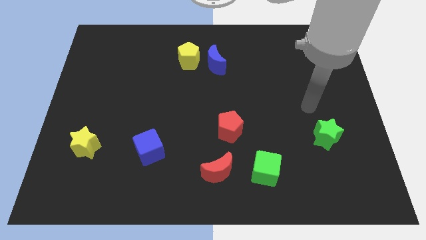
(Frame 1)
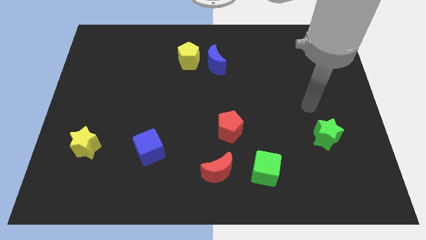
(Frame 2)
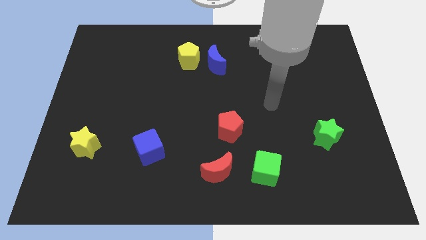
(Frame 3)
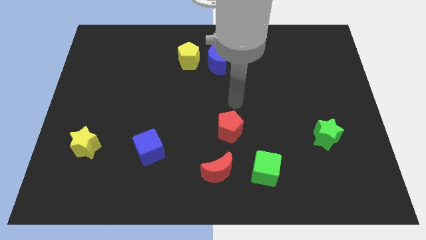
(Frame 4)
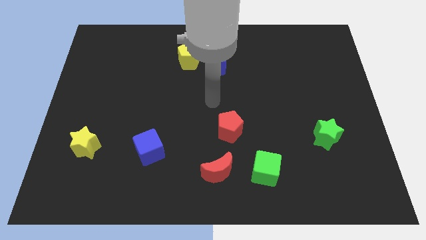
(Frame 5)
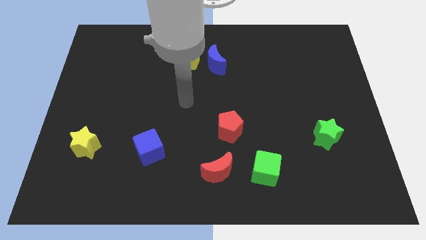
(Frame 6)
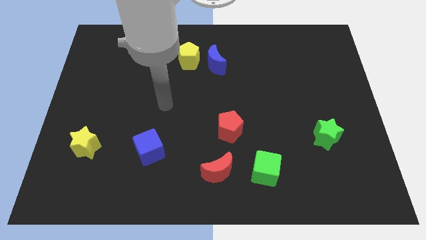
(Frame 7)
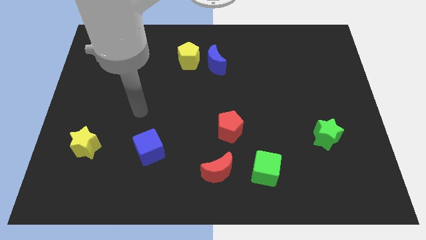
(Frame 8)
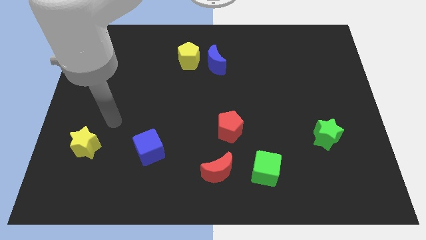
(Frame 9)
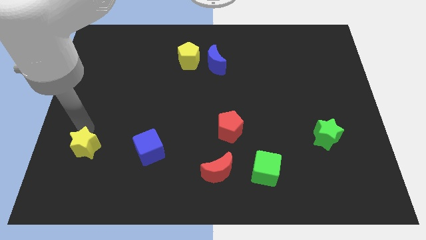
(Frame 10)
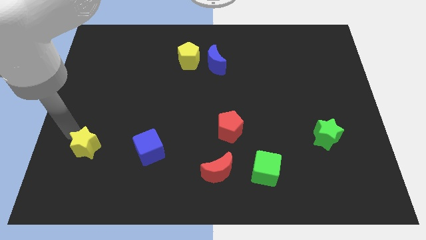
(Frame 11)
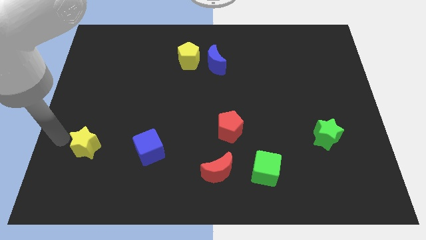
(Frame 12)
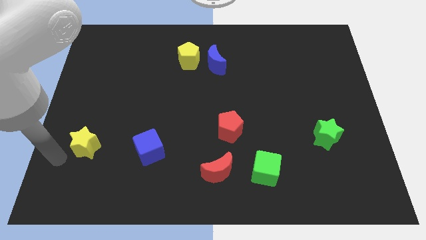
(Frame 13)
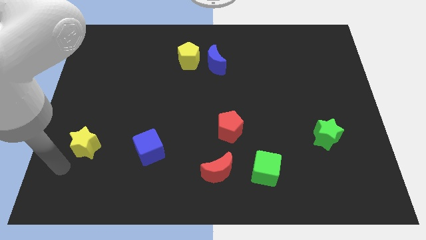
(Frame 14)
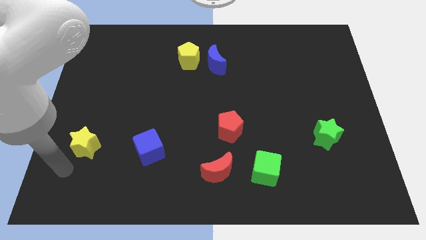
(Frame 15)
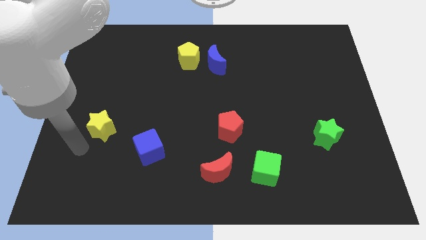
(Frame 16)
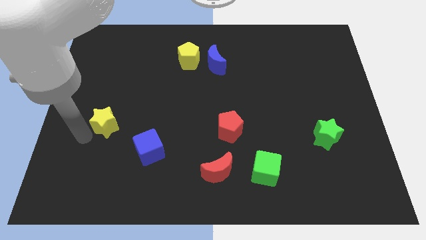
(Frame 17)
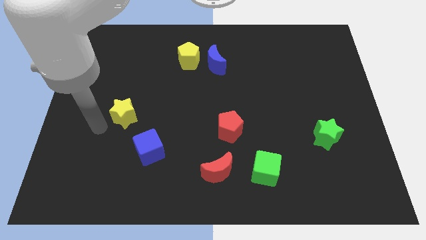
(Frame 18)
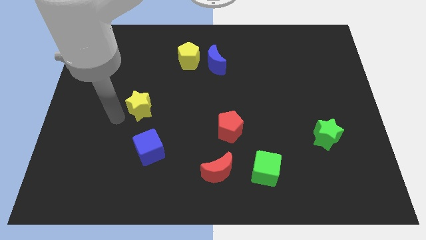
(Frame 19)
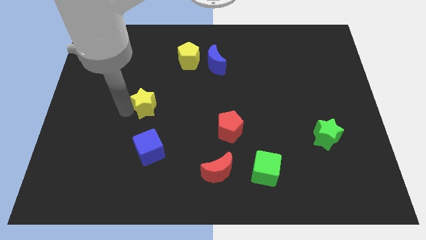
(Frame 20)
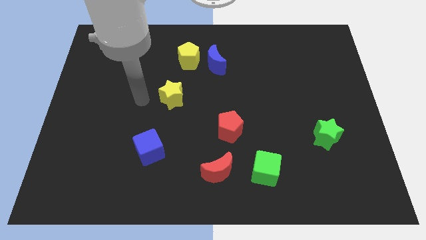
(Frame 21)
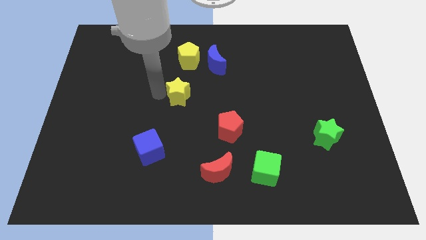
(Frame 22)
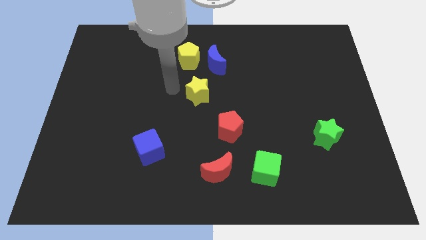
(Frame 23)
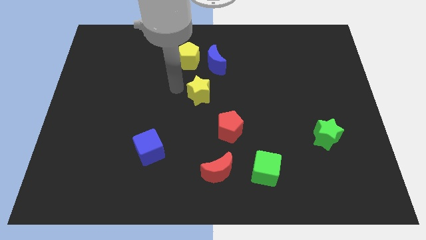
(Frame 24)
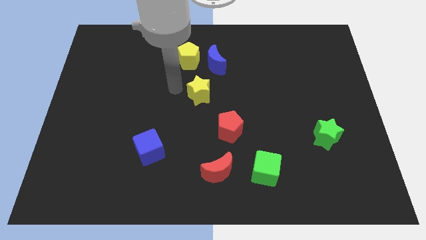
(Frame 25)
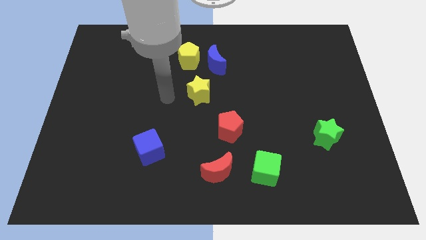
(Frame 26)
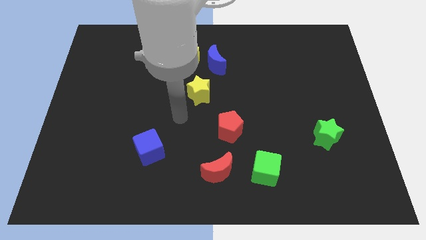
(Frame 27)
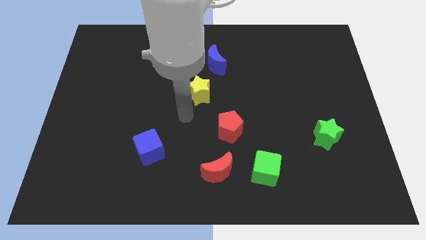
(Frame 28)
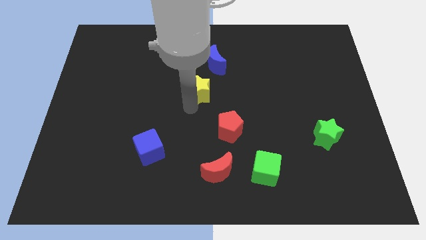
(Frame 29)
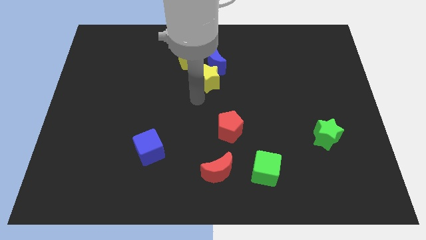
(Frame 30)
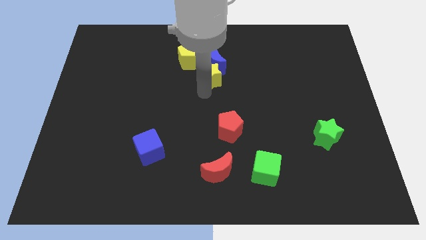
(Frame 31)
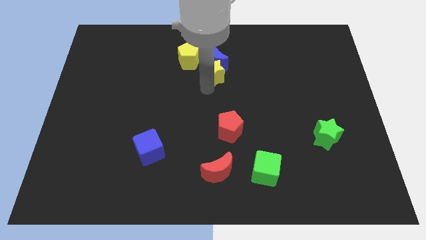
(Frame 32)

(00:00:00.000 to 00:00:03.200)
move the yellow star close to the blue moon

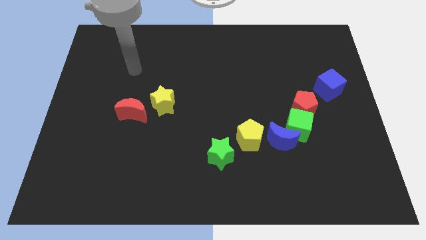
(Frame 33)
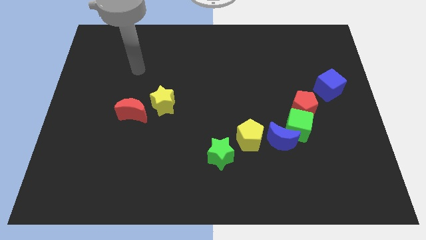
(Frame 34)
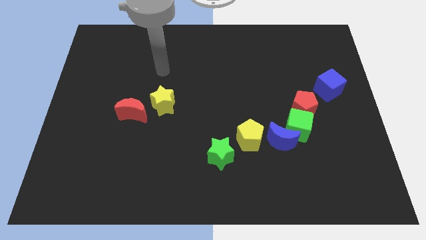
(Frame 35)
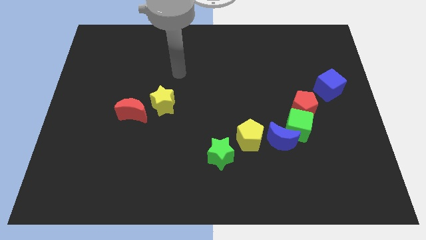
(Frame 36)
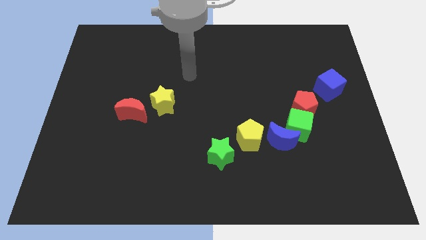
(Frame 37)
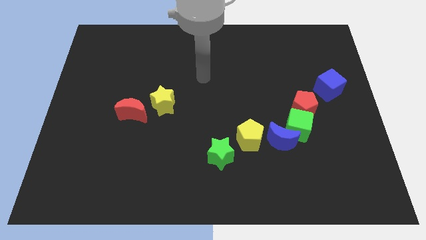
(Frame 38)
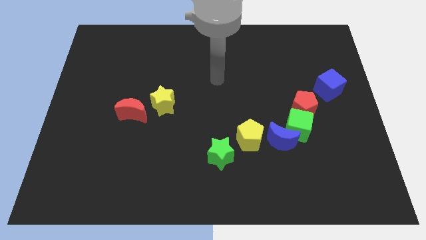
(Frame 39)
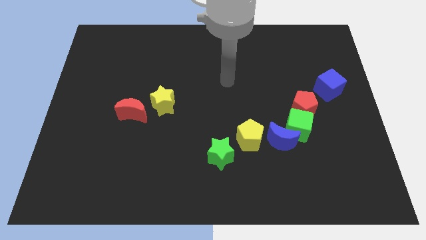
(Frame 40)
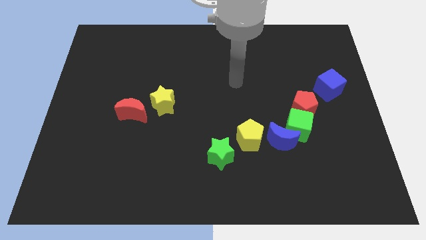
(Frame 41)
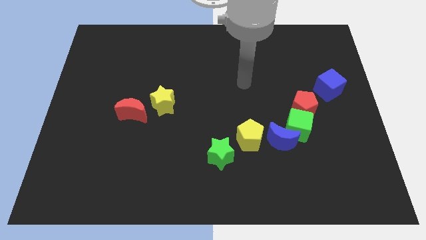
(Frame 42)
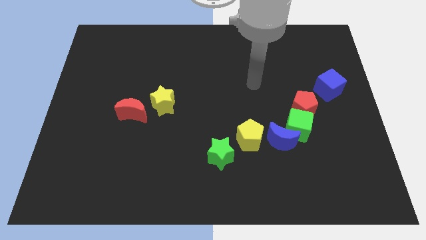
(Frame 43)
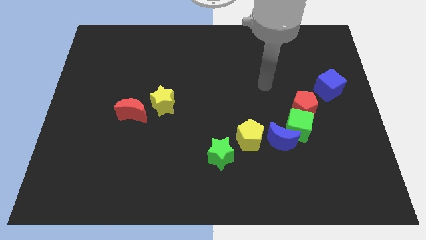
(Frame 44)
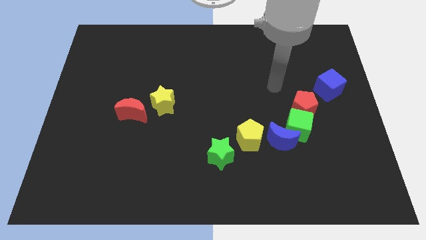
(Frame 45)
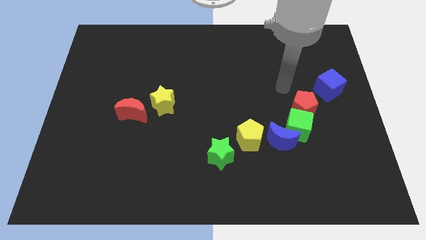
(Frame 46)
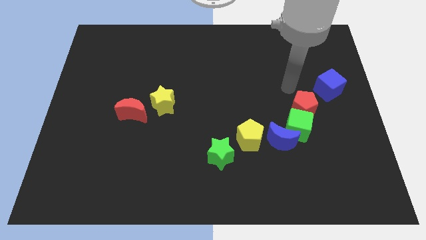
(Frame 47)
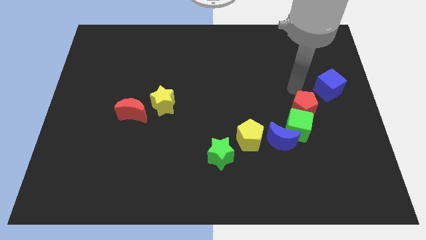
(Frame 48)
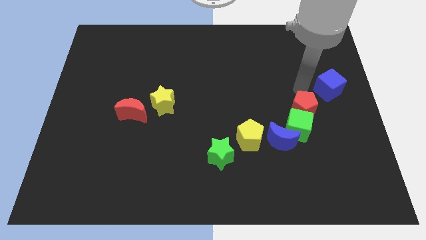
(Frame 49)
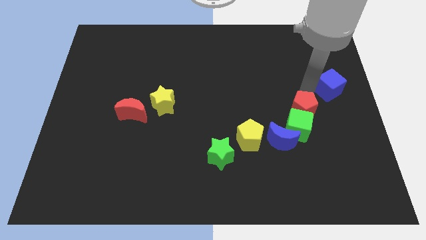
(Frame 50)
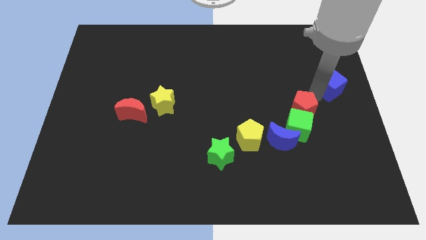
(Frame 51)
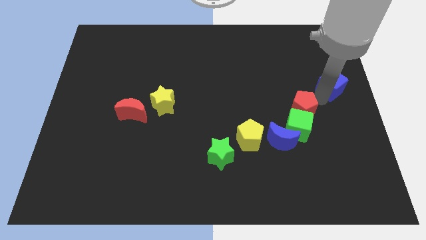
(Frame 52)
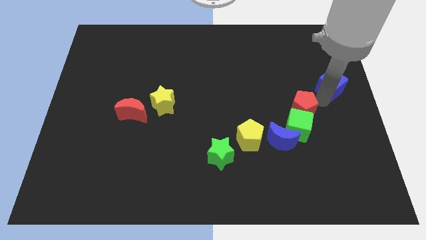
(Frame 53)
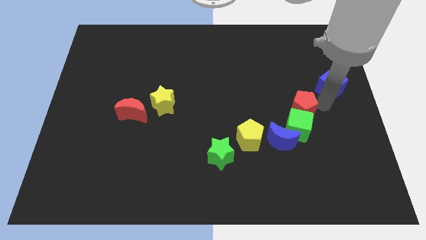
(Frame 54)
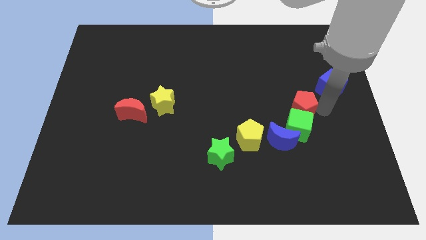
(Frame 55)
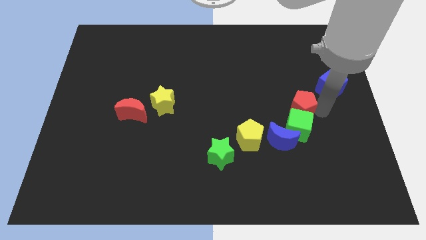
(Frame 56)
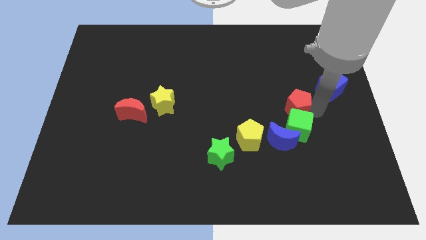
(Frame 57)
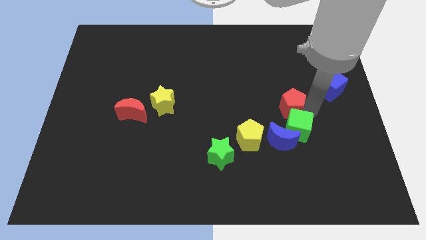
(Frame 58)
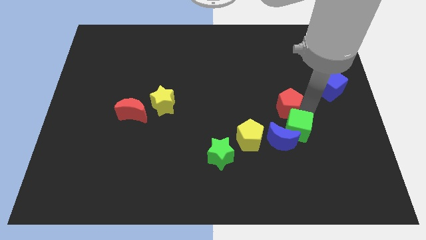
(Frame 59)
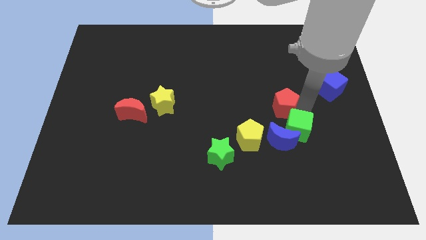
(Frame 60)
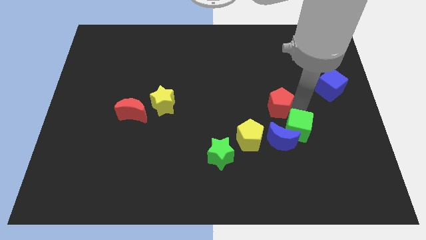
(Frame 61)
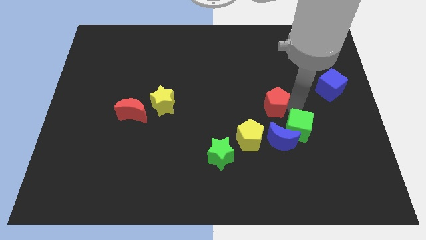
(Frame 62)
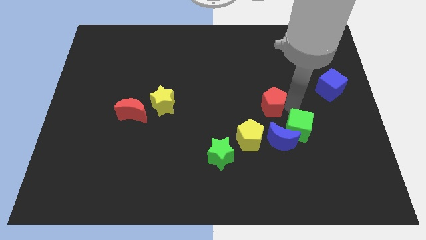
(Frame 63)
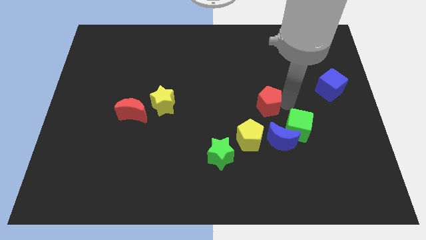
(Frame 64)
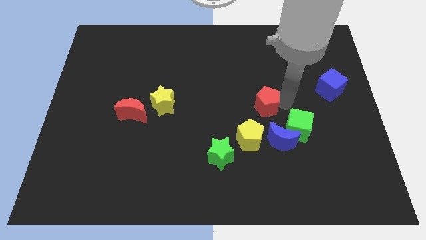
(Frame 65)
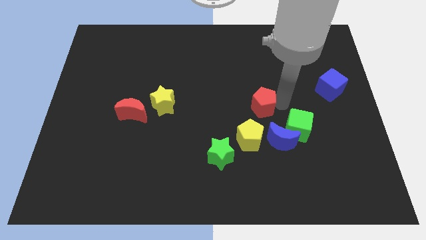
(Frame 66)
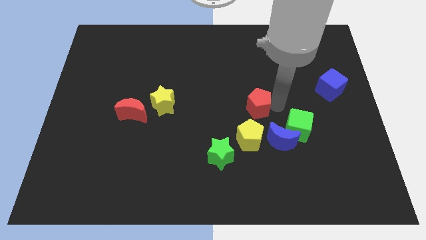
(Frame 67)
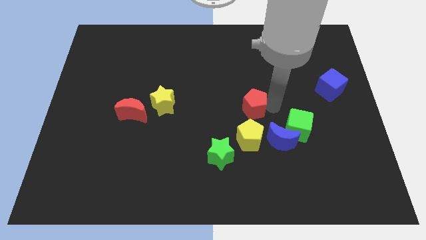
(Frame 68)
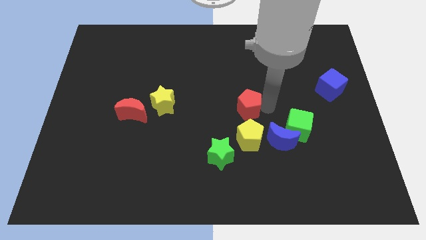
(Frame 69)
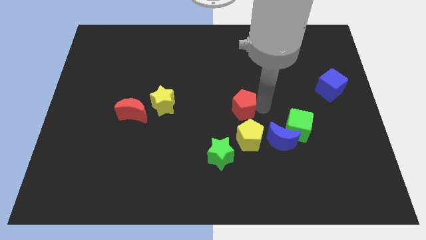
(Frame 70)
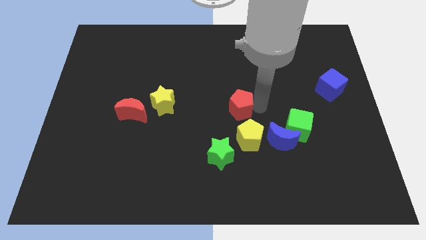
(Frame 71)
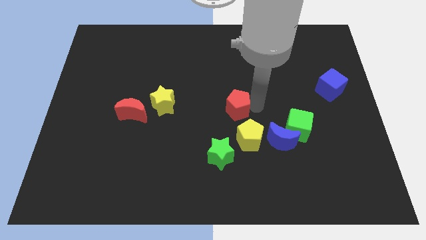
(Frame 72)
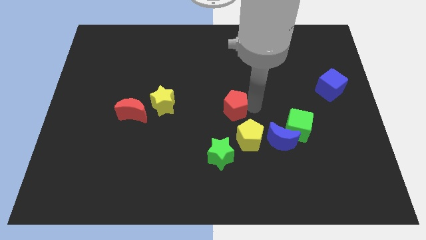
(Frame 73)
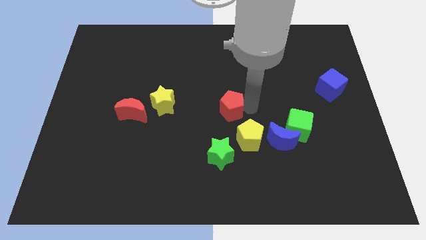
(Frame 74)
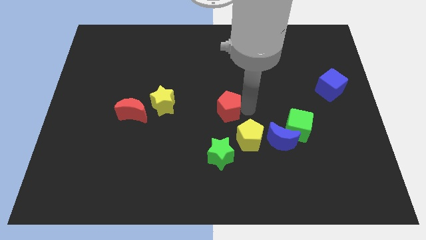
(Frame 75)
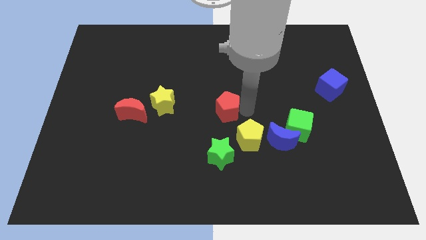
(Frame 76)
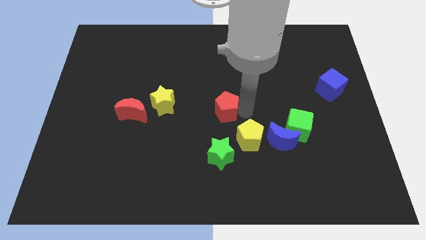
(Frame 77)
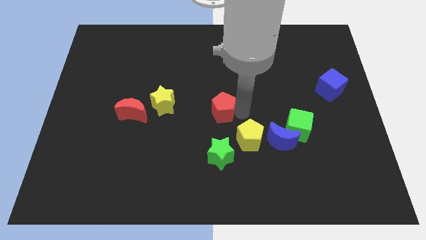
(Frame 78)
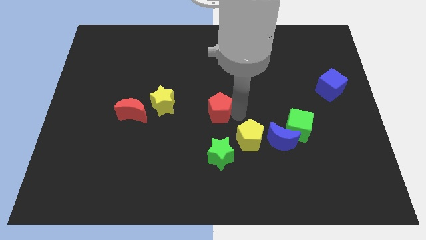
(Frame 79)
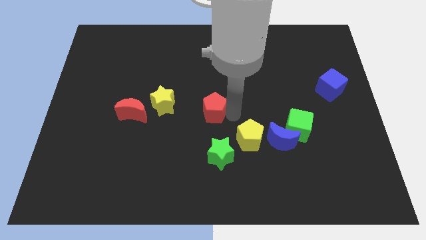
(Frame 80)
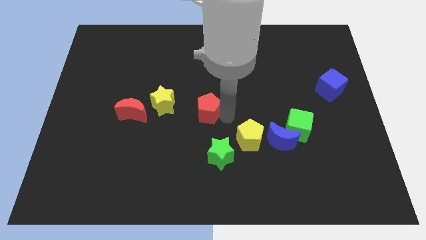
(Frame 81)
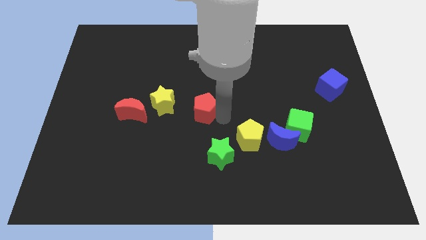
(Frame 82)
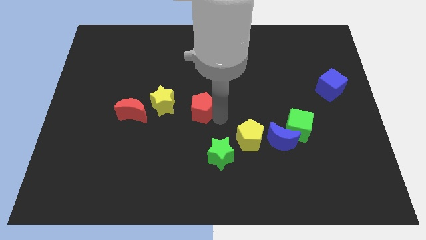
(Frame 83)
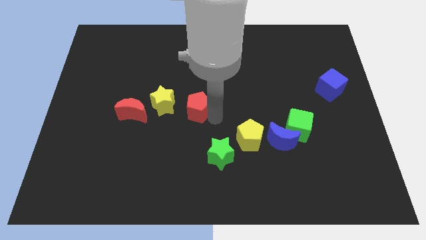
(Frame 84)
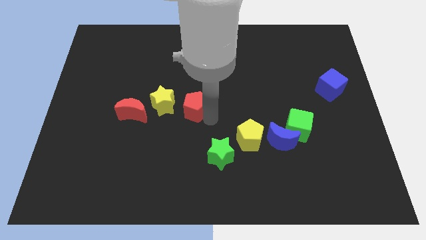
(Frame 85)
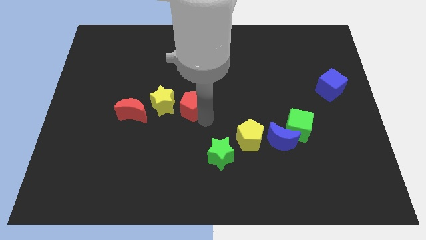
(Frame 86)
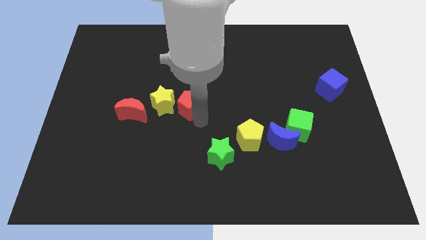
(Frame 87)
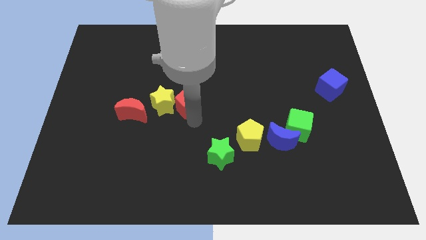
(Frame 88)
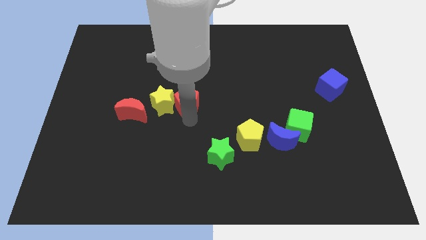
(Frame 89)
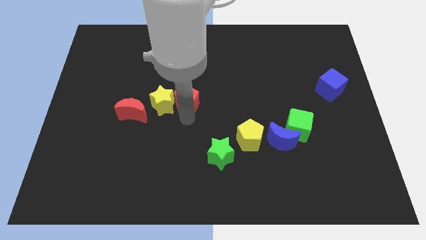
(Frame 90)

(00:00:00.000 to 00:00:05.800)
push the red pentagon next to the yellow star
